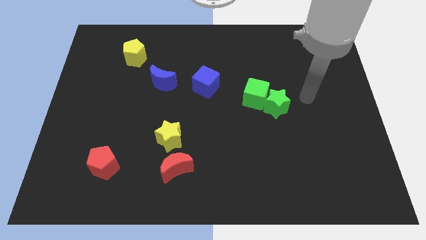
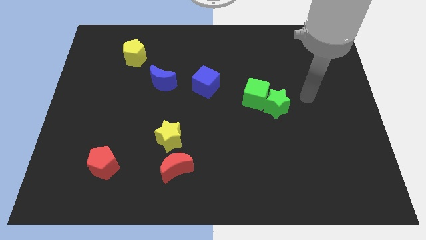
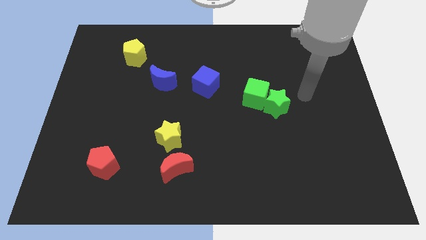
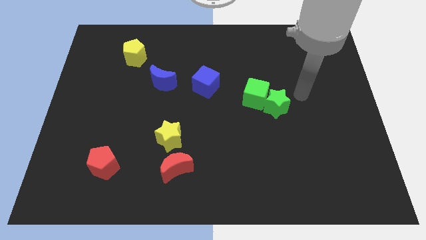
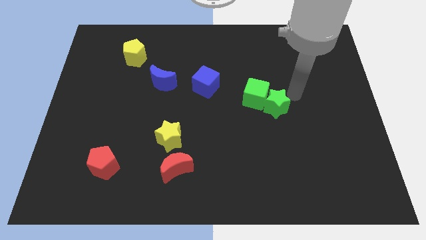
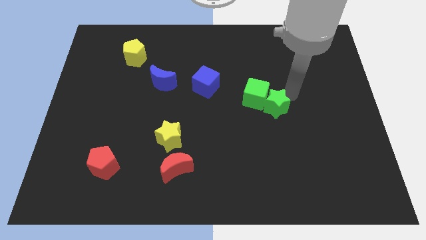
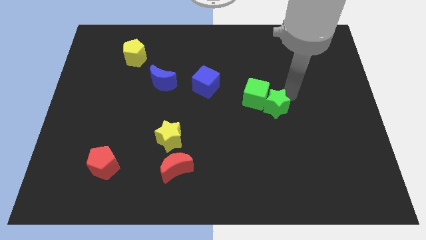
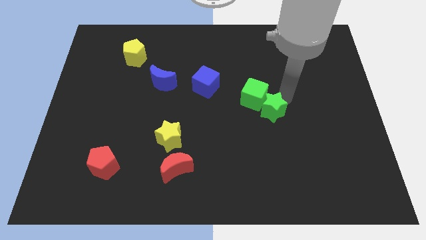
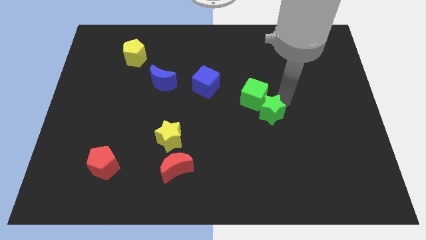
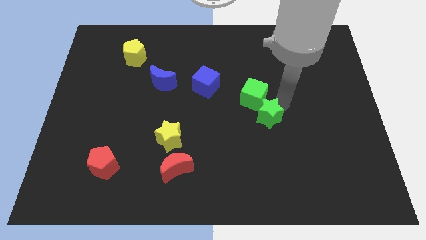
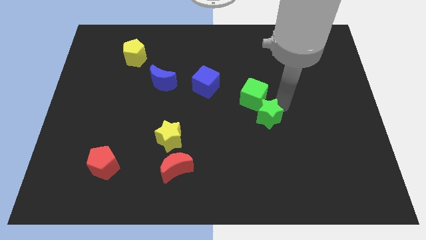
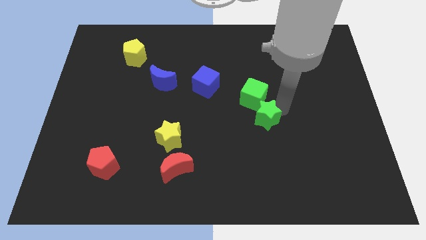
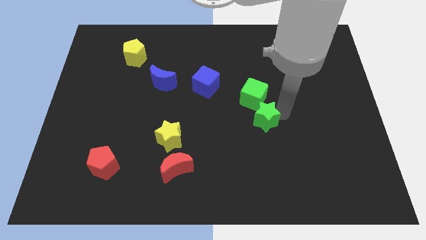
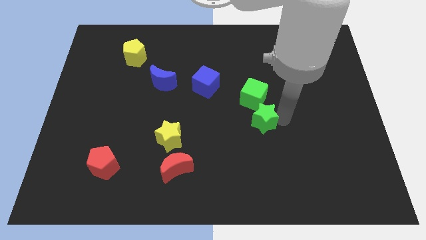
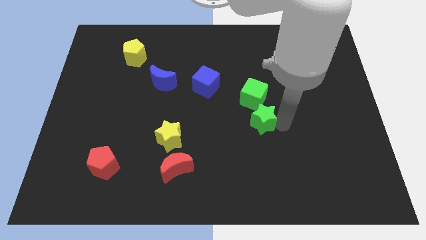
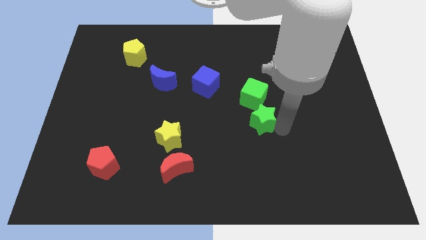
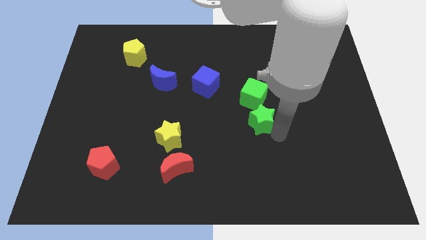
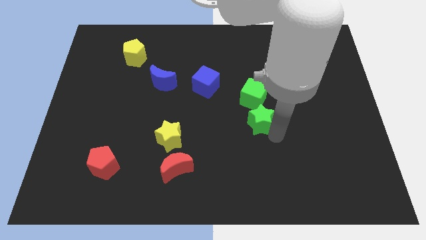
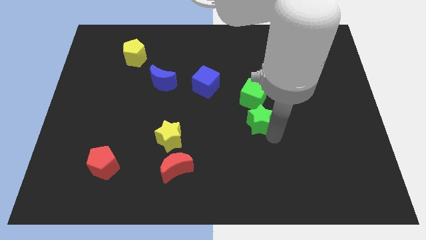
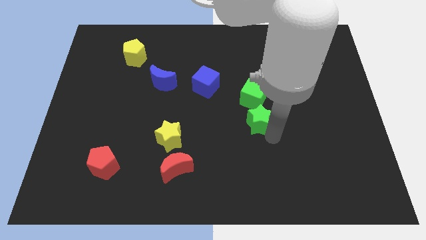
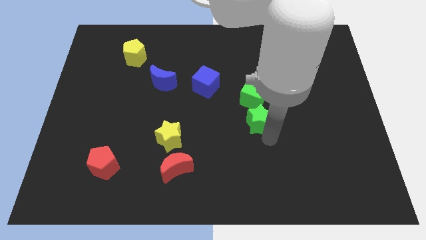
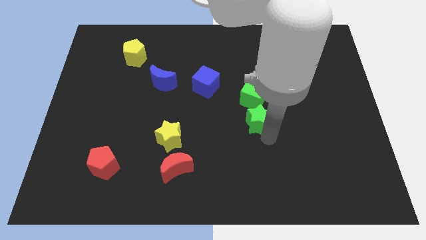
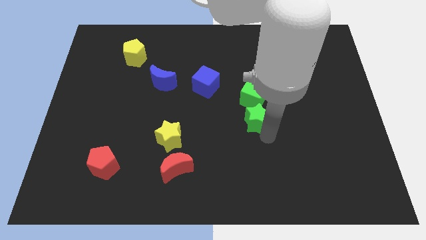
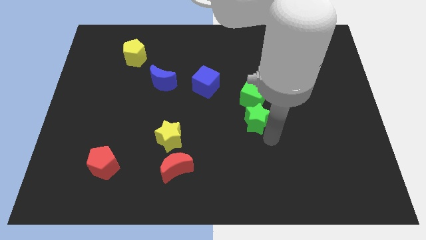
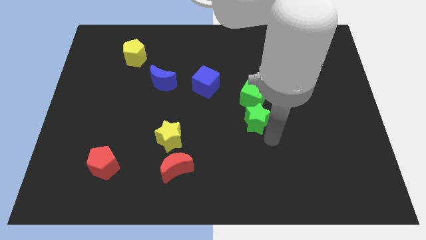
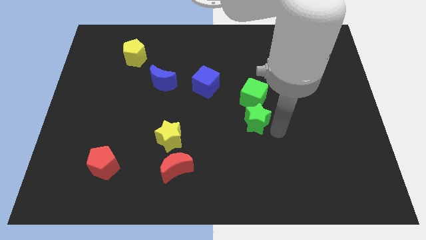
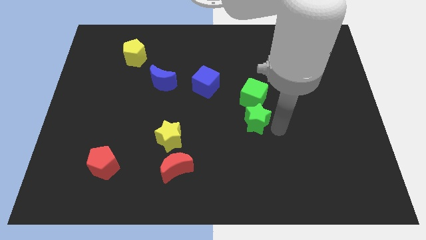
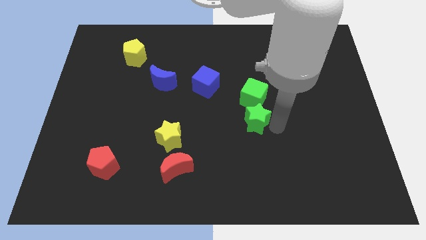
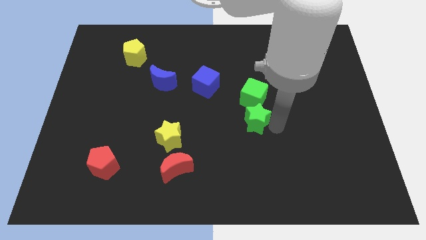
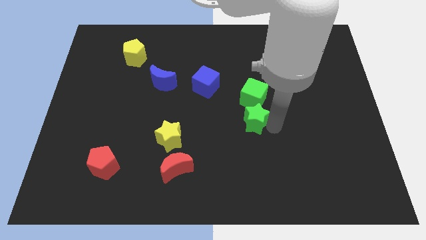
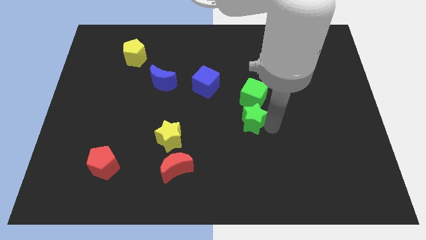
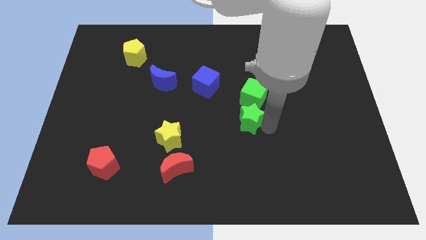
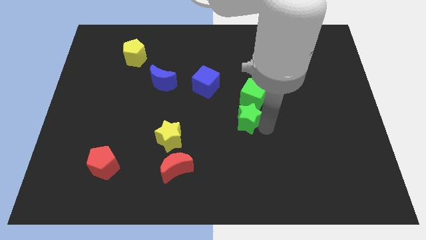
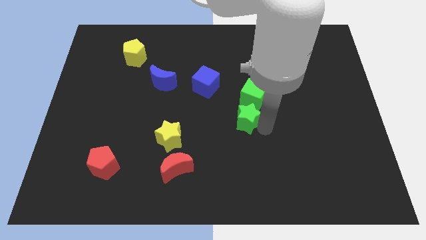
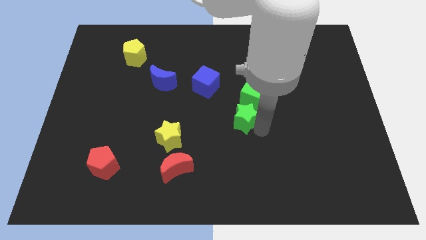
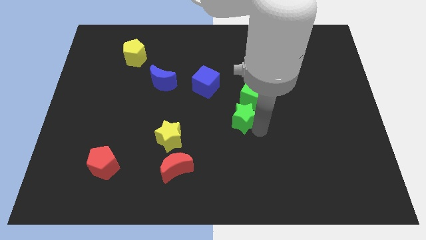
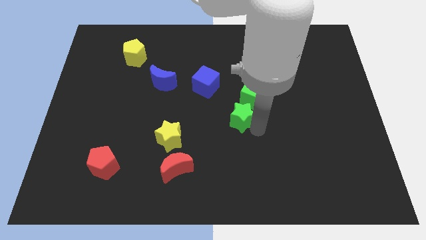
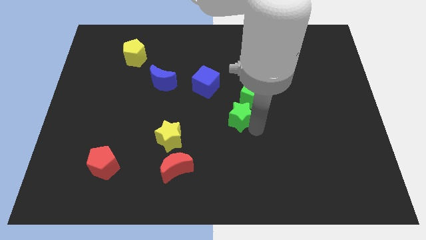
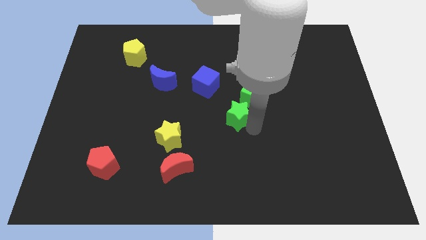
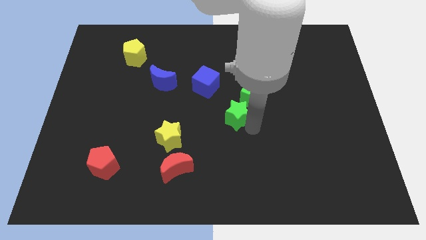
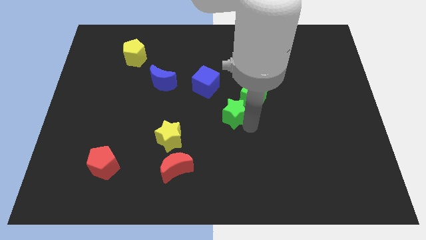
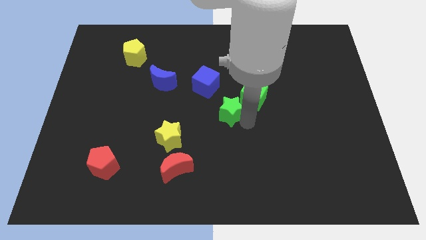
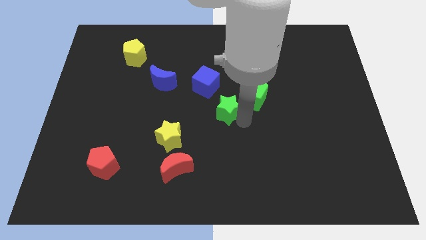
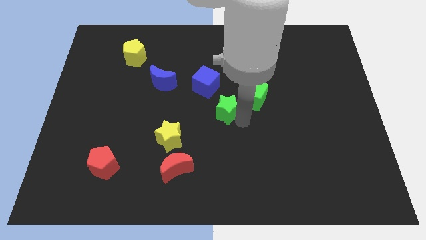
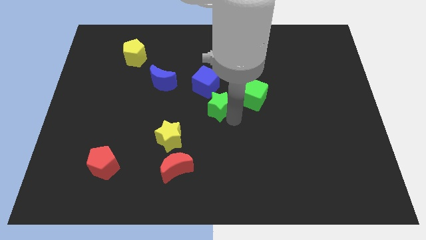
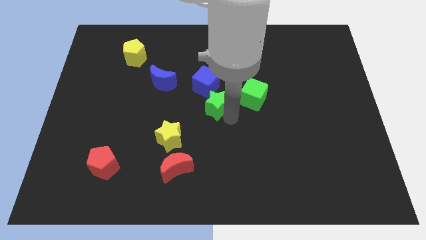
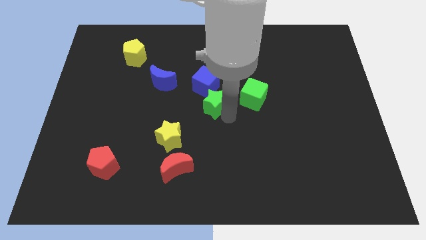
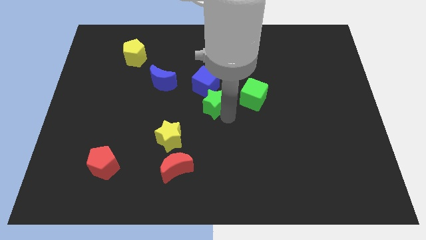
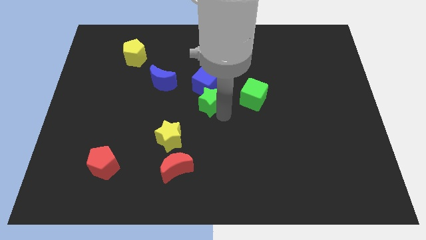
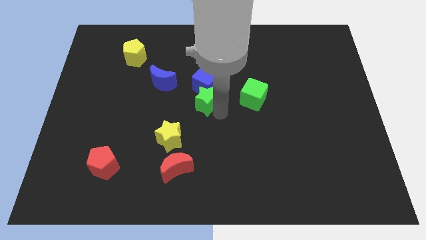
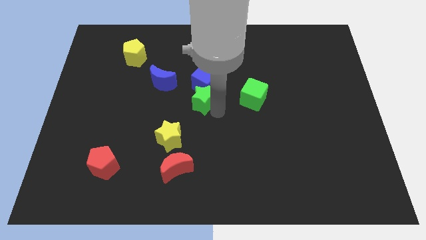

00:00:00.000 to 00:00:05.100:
put the green star next to the blue cube

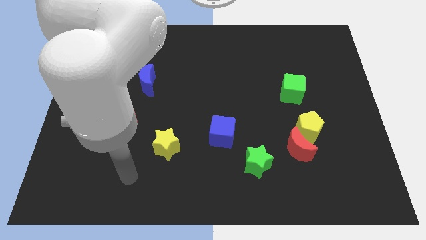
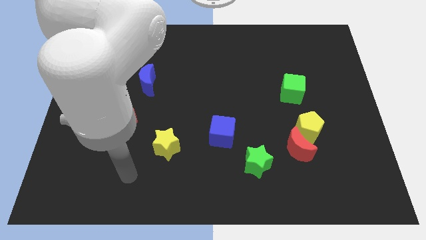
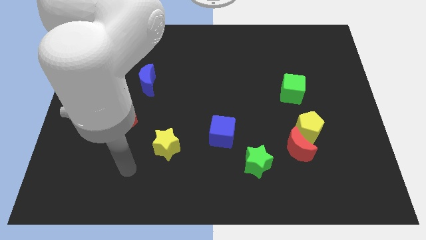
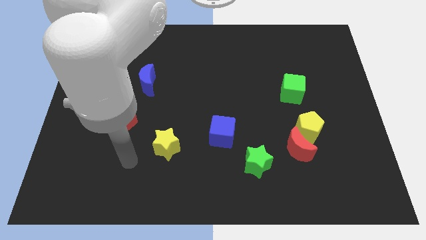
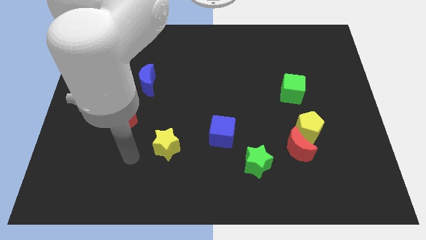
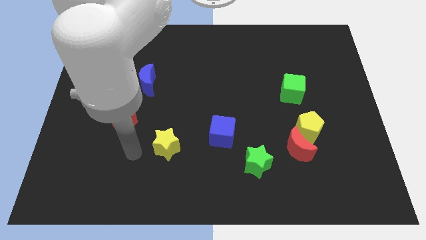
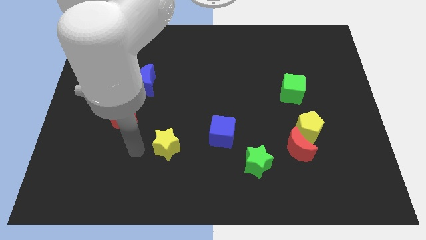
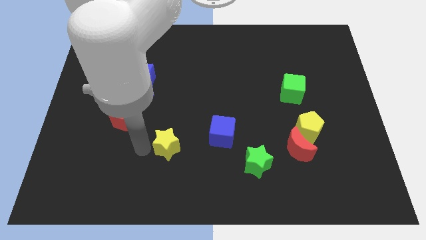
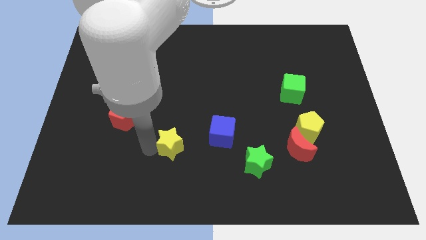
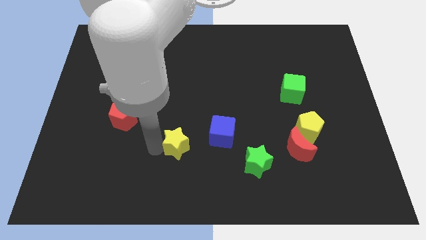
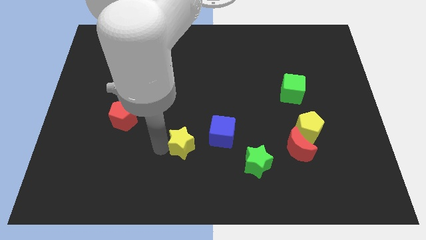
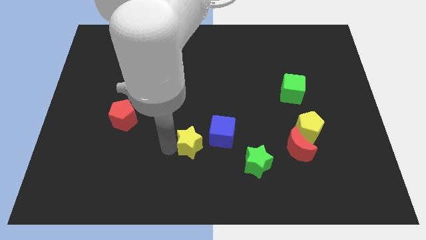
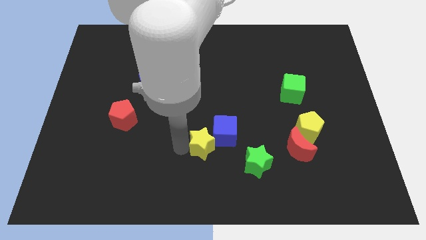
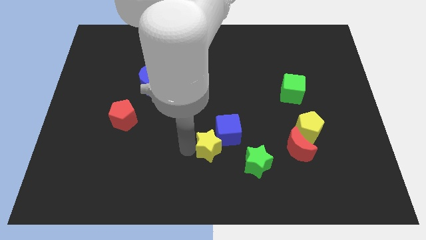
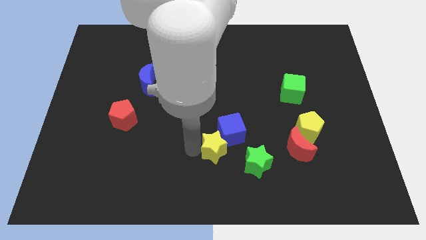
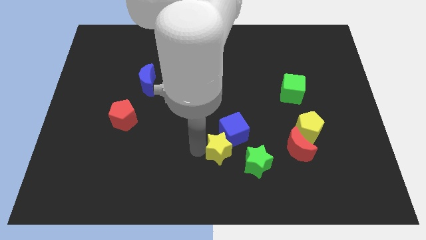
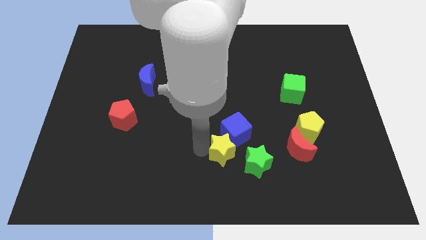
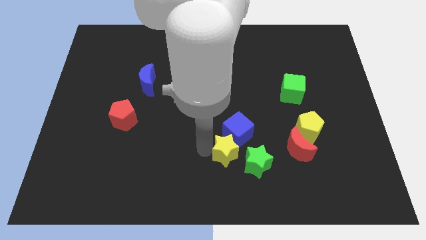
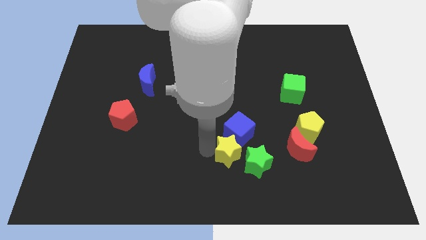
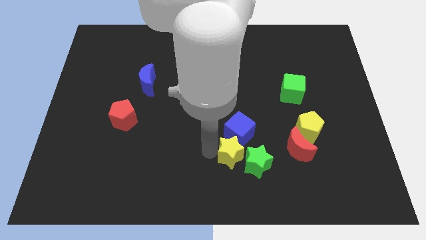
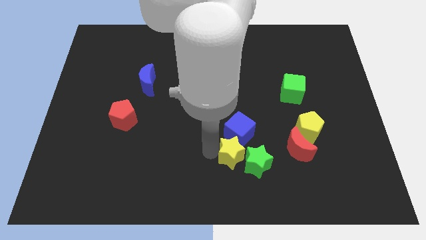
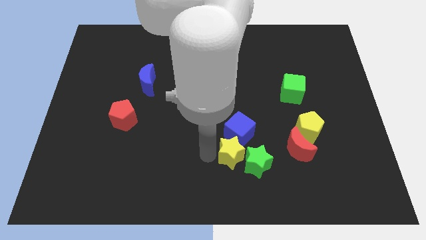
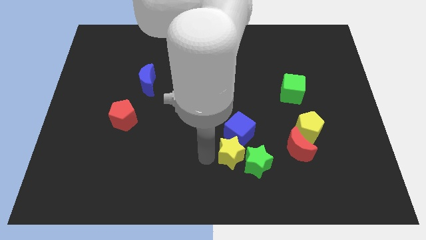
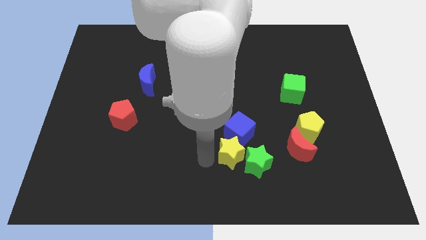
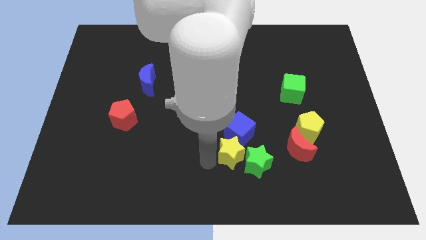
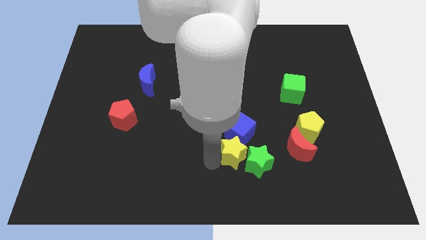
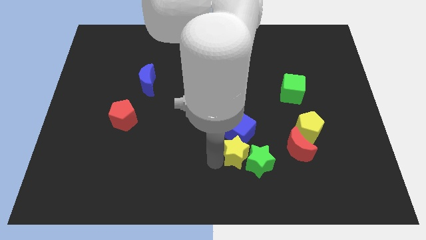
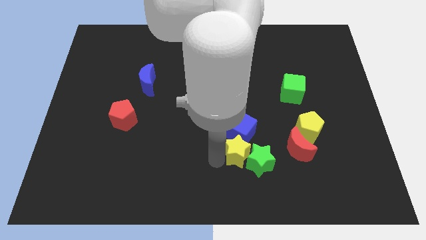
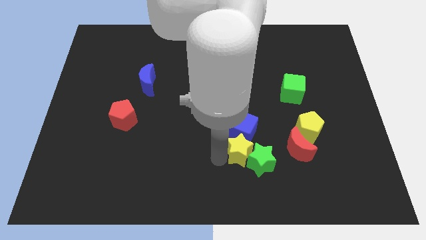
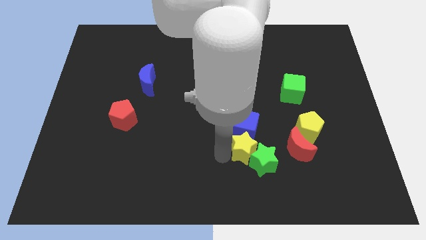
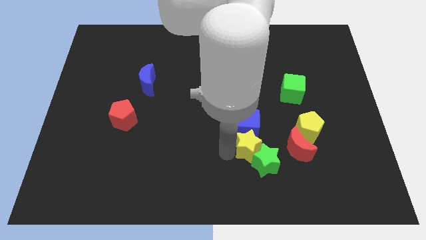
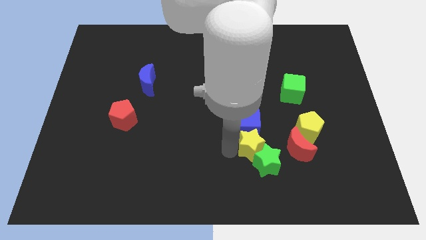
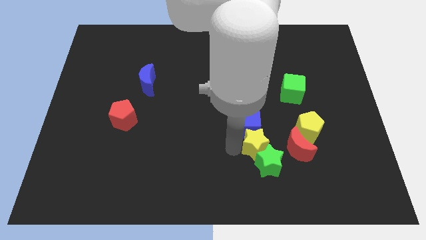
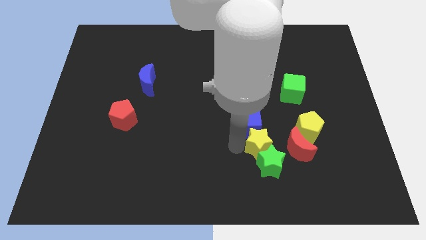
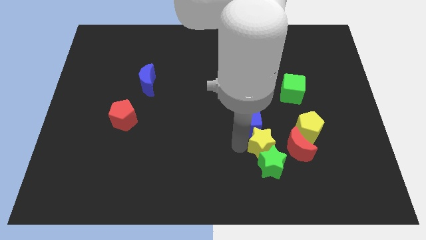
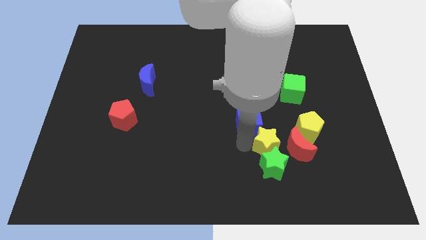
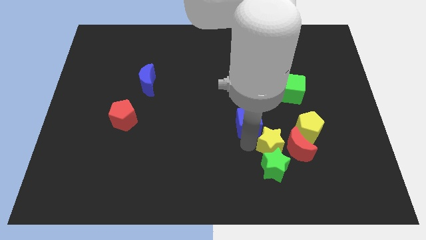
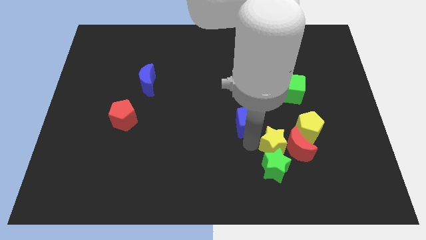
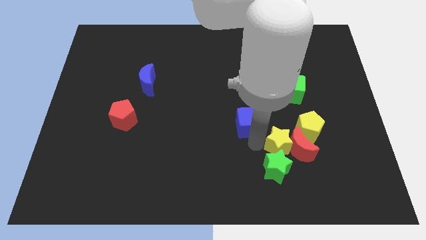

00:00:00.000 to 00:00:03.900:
slide the yellow star close to the red moon
